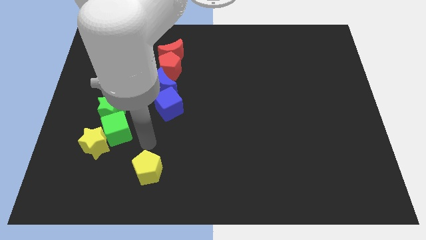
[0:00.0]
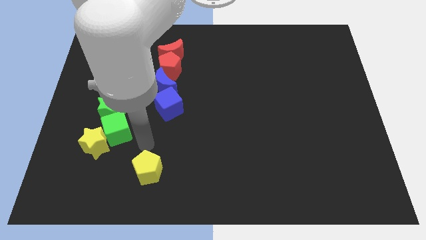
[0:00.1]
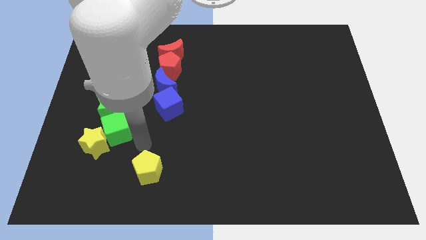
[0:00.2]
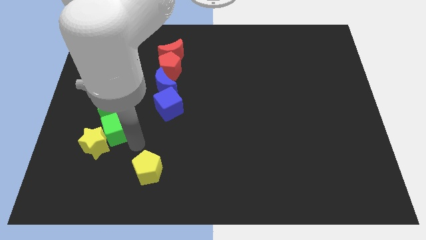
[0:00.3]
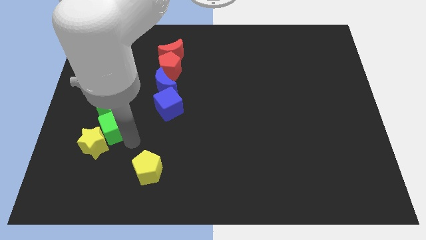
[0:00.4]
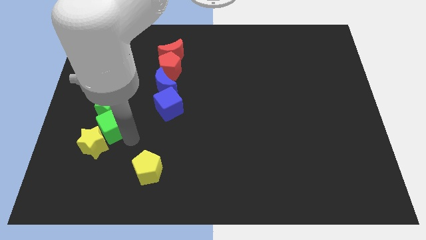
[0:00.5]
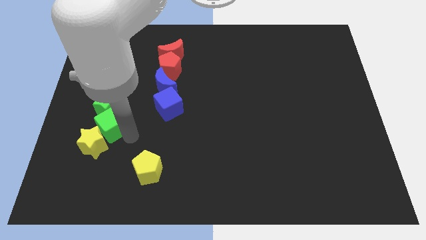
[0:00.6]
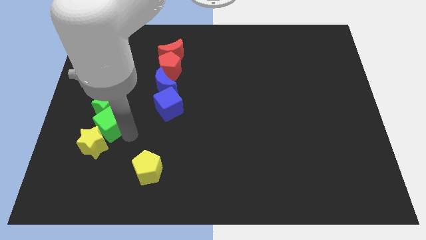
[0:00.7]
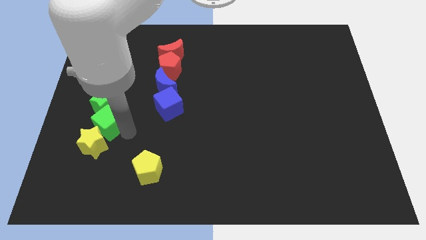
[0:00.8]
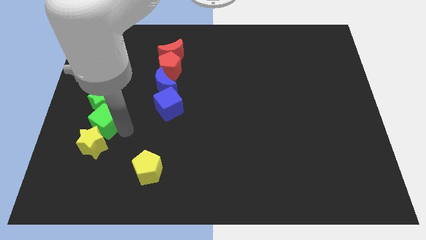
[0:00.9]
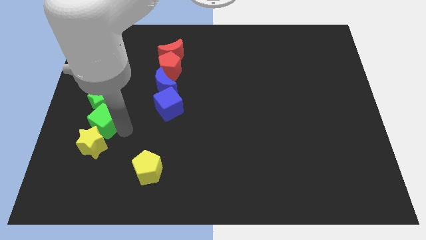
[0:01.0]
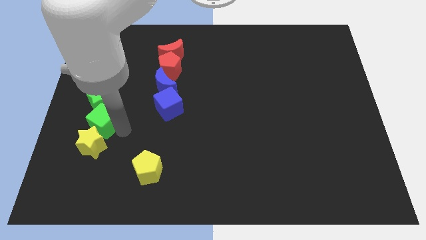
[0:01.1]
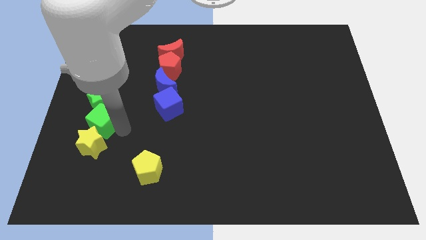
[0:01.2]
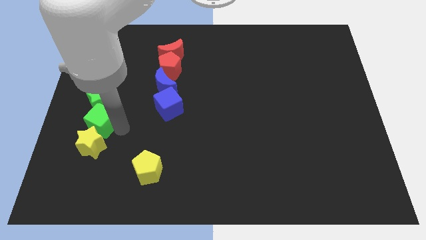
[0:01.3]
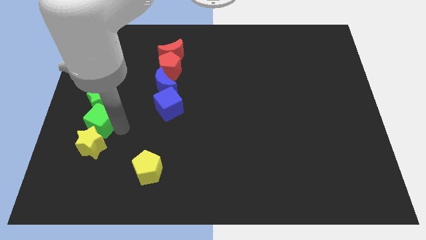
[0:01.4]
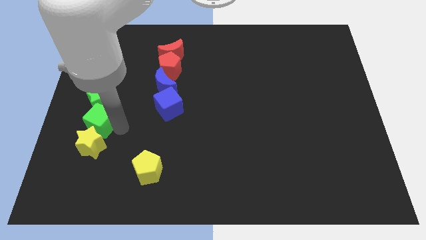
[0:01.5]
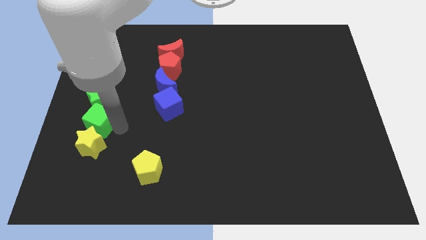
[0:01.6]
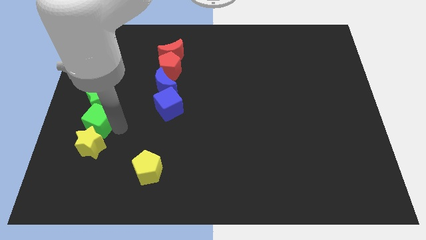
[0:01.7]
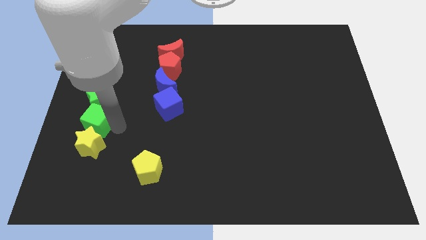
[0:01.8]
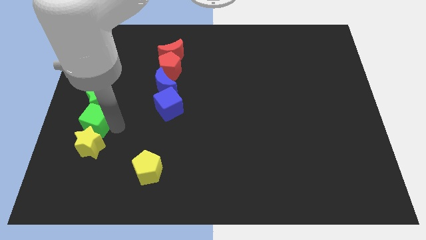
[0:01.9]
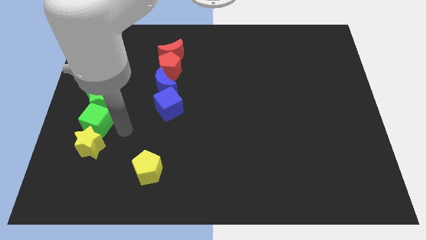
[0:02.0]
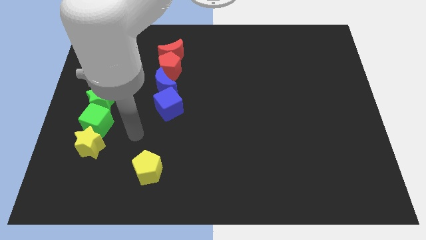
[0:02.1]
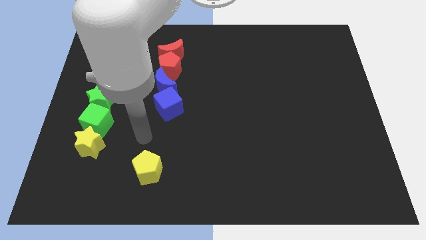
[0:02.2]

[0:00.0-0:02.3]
place the green blocks and yellow star in a vertical line

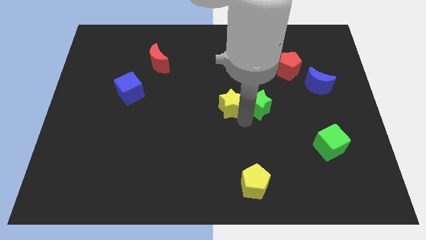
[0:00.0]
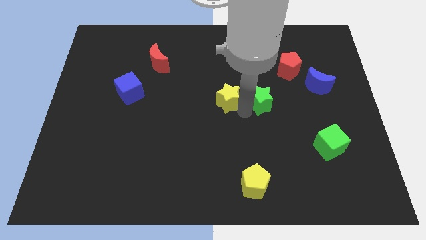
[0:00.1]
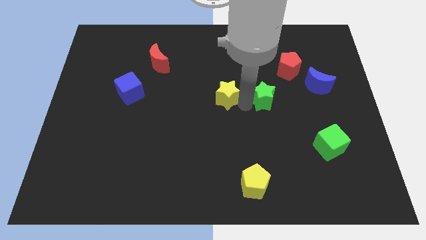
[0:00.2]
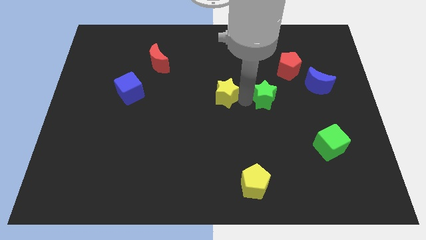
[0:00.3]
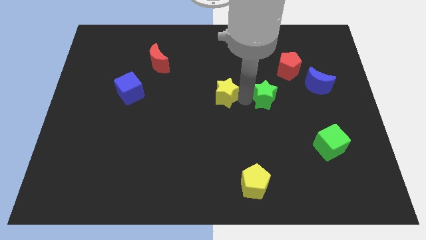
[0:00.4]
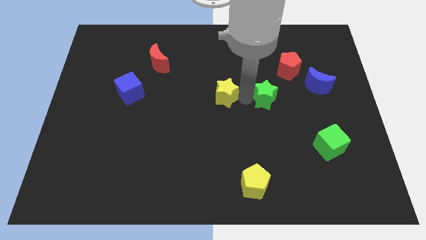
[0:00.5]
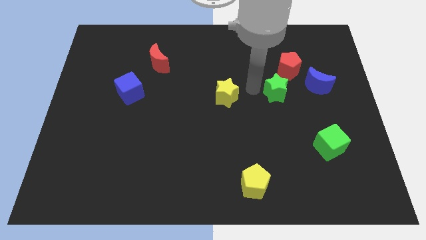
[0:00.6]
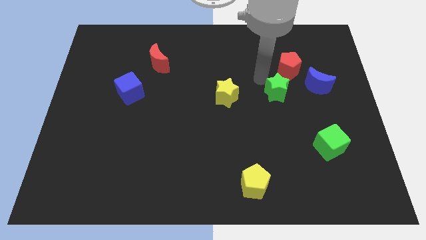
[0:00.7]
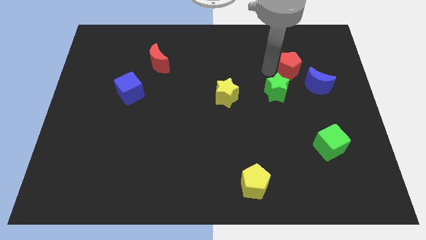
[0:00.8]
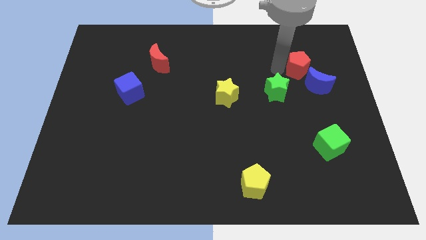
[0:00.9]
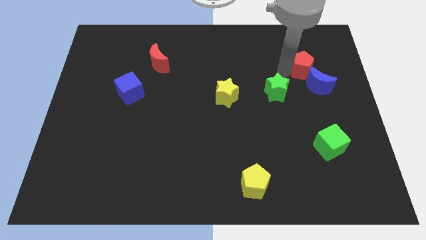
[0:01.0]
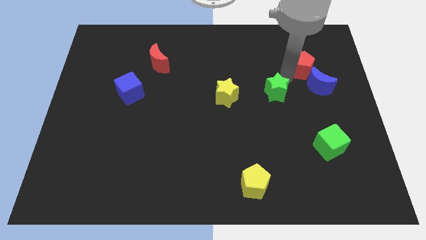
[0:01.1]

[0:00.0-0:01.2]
move green and the yellow star away from each other

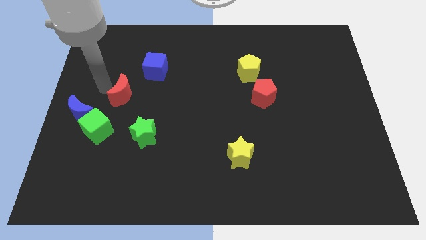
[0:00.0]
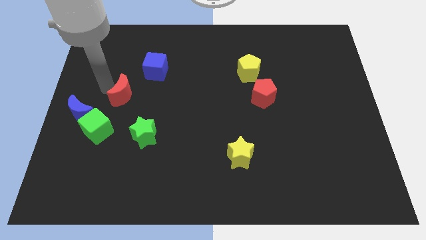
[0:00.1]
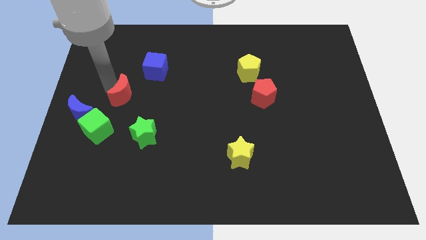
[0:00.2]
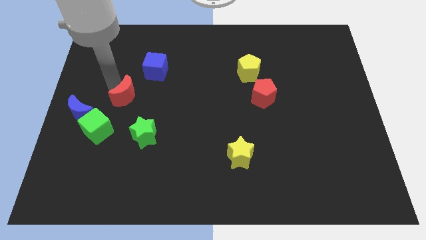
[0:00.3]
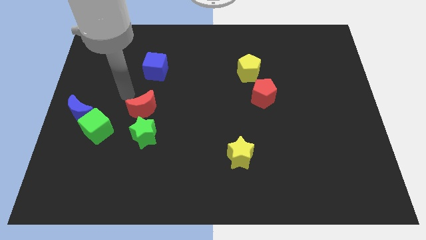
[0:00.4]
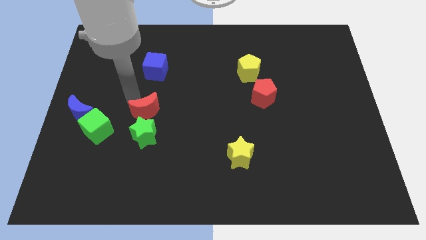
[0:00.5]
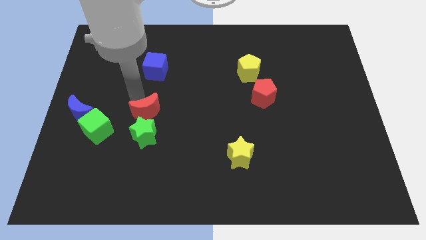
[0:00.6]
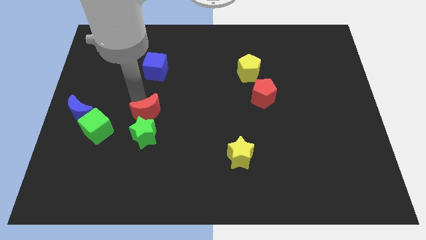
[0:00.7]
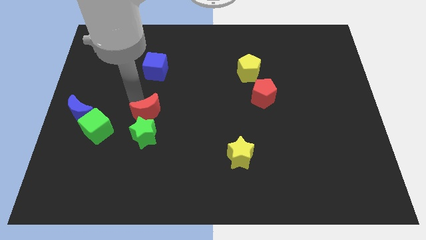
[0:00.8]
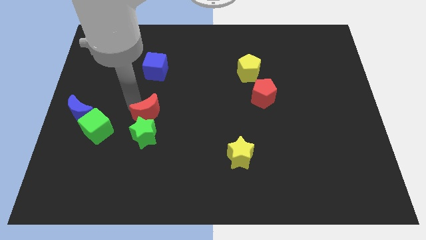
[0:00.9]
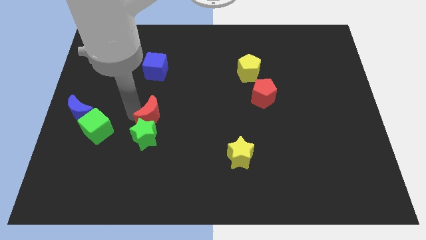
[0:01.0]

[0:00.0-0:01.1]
move the red crescent into the green star

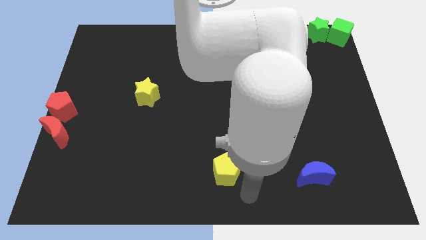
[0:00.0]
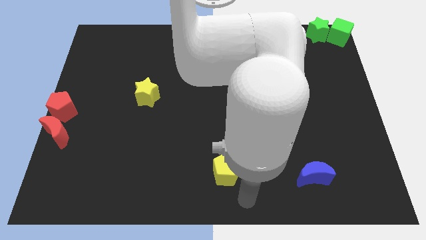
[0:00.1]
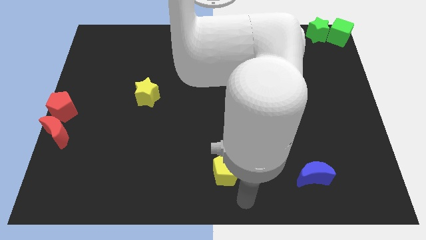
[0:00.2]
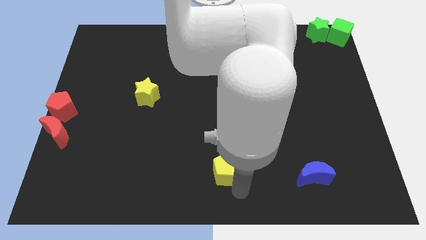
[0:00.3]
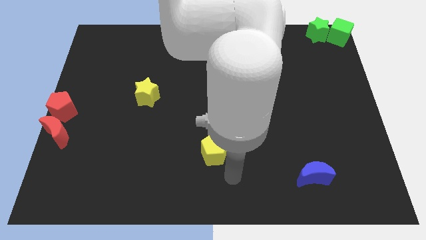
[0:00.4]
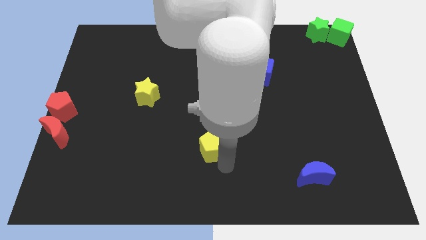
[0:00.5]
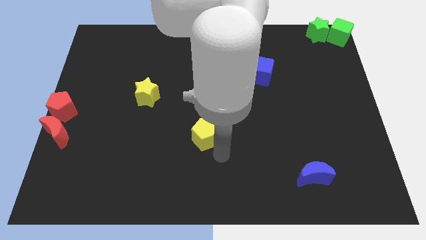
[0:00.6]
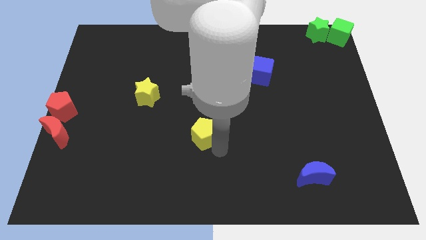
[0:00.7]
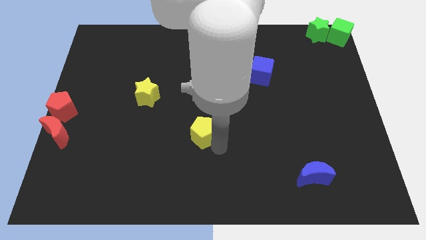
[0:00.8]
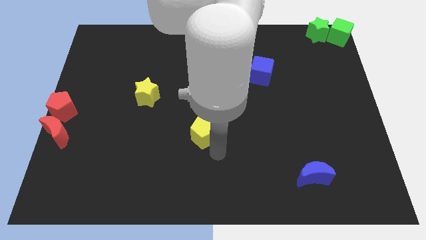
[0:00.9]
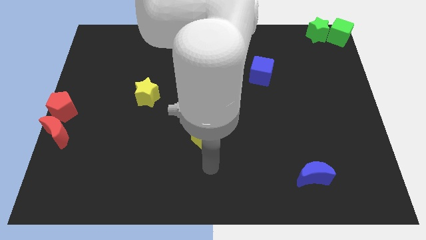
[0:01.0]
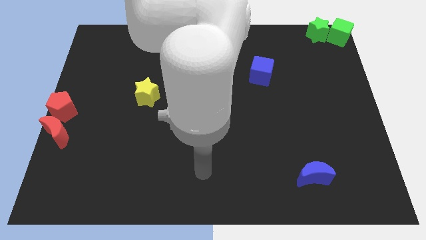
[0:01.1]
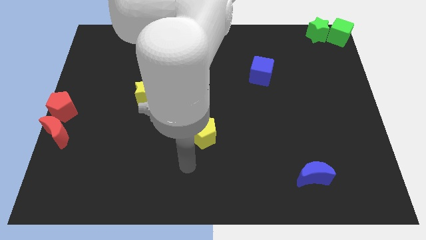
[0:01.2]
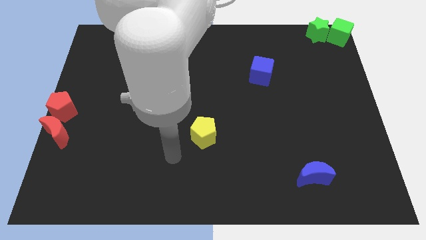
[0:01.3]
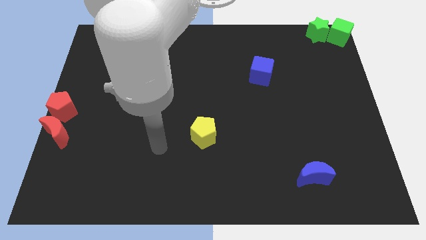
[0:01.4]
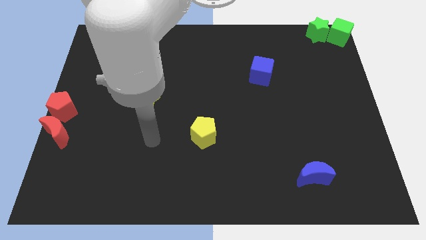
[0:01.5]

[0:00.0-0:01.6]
slide the yellow pentagon towards the center of the board

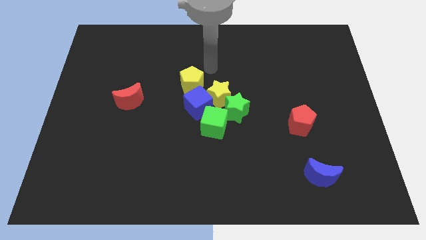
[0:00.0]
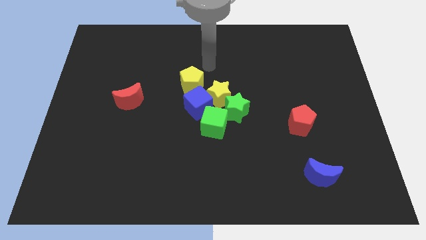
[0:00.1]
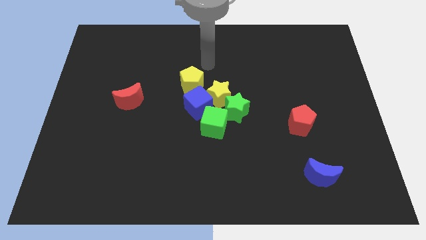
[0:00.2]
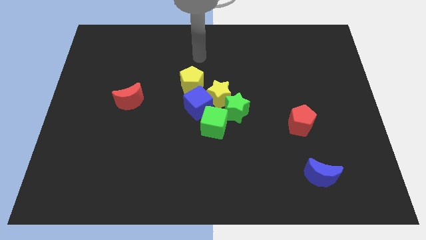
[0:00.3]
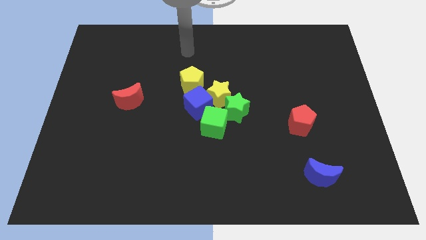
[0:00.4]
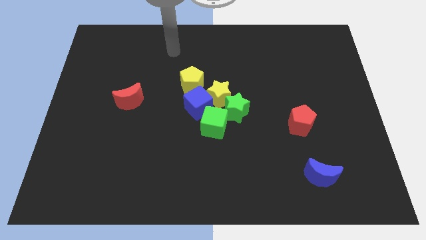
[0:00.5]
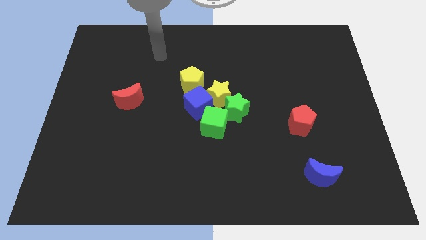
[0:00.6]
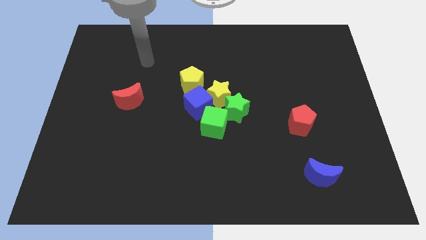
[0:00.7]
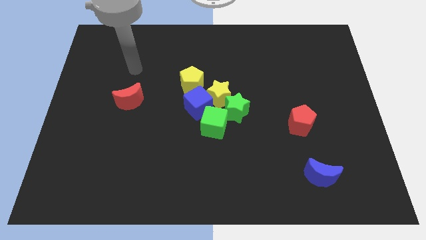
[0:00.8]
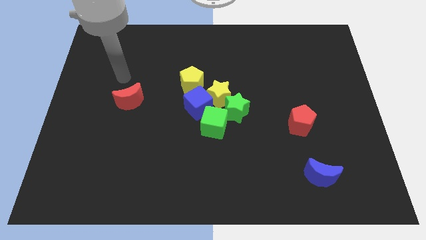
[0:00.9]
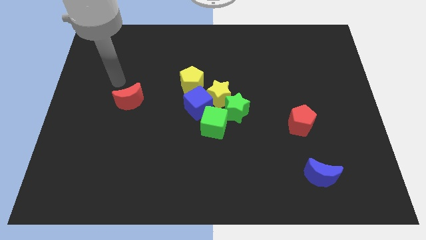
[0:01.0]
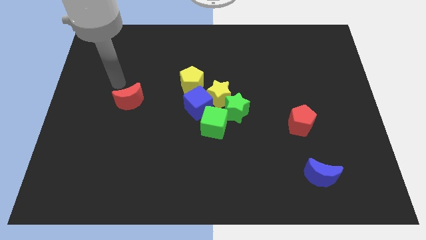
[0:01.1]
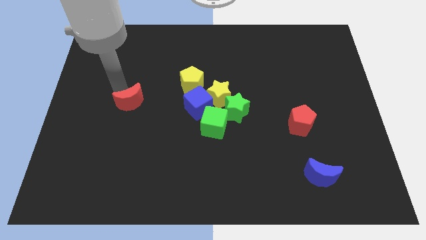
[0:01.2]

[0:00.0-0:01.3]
point your arm above the red crescent

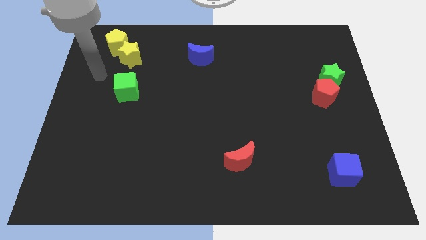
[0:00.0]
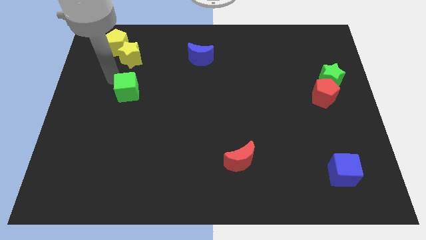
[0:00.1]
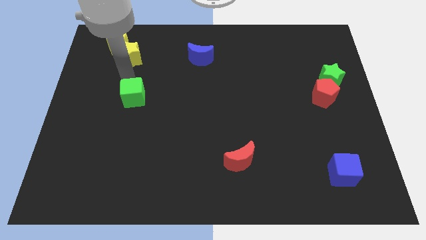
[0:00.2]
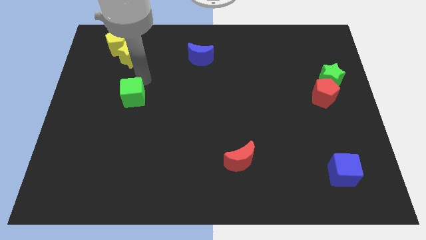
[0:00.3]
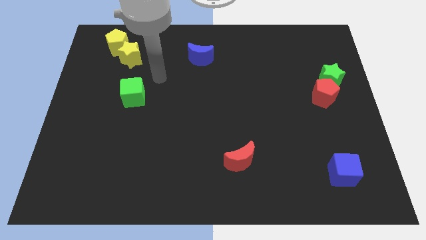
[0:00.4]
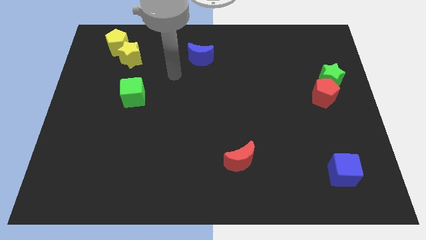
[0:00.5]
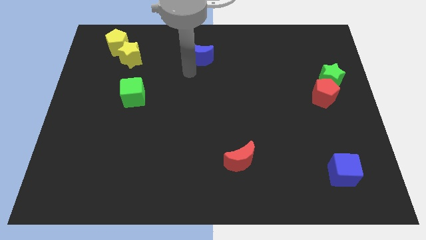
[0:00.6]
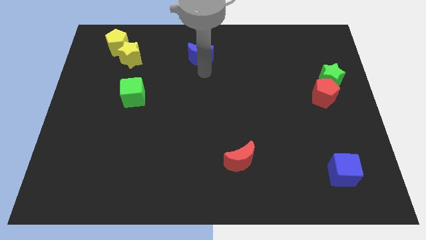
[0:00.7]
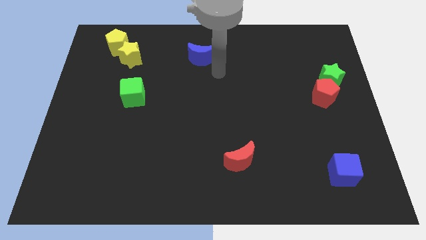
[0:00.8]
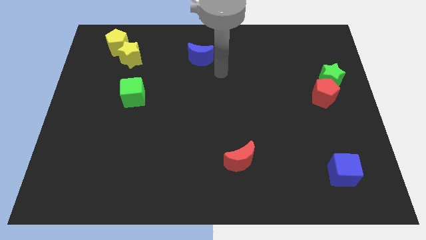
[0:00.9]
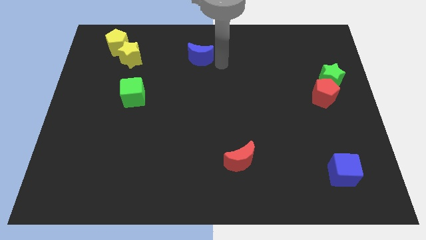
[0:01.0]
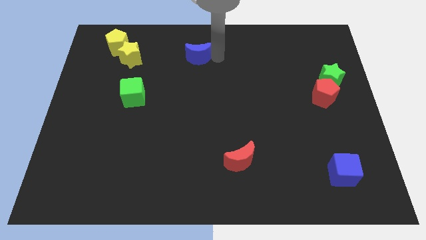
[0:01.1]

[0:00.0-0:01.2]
place arm on the right side of blue crescent
